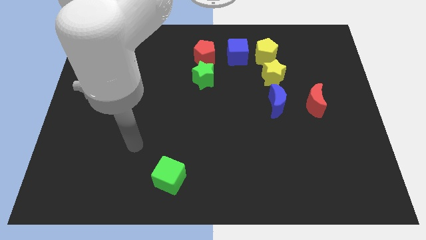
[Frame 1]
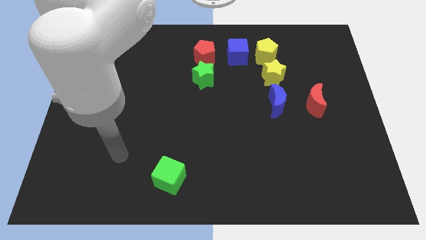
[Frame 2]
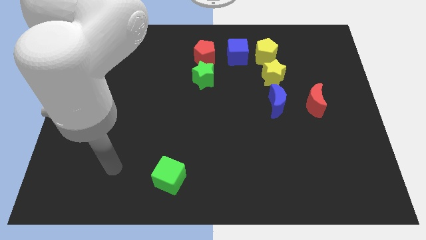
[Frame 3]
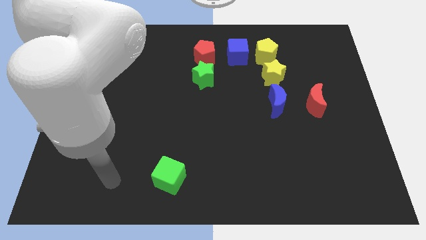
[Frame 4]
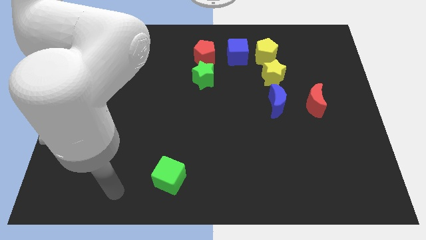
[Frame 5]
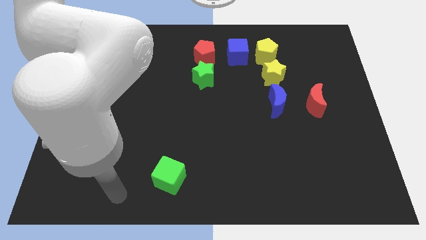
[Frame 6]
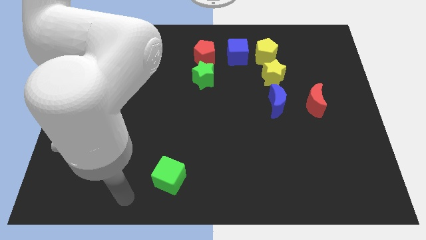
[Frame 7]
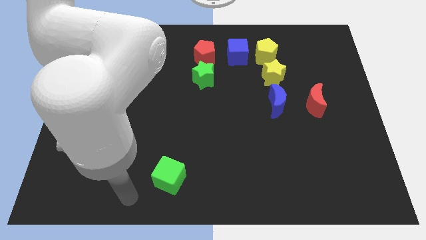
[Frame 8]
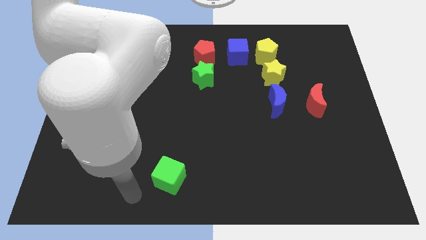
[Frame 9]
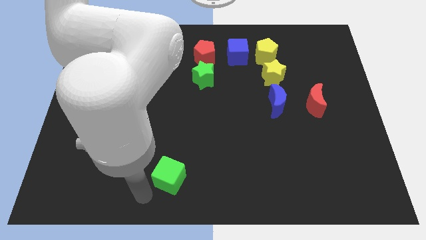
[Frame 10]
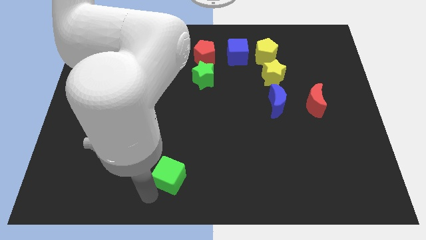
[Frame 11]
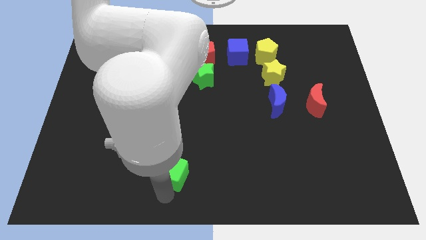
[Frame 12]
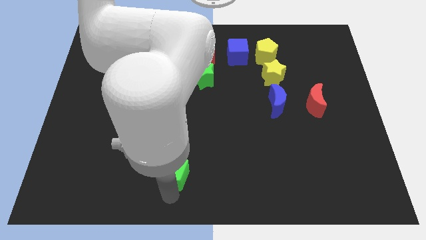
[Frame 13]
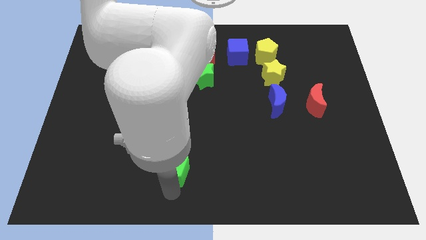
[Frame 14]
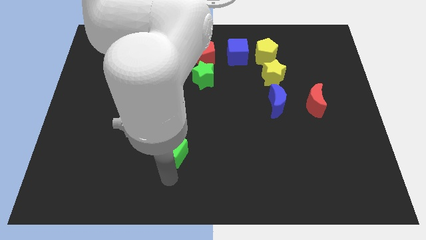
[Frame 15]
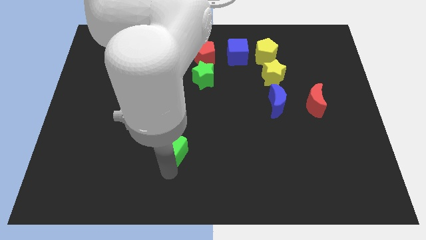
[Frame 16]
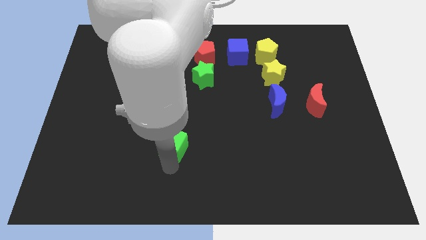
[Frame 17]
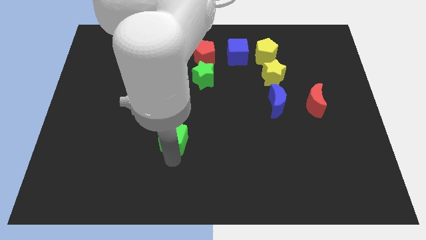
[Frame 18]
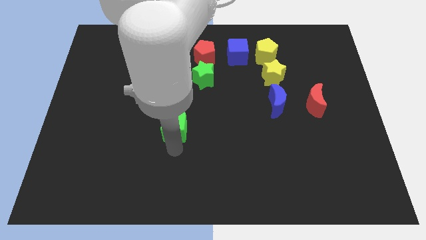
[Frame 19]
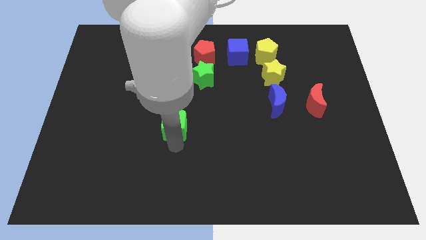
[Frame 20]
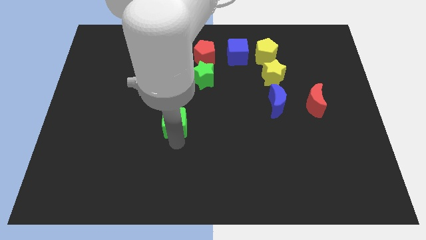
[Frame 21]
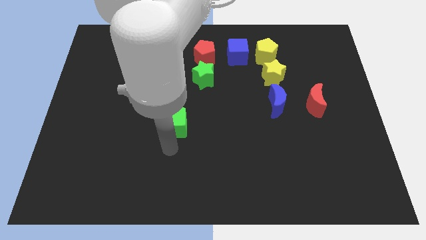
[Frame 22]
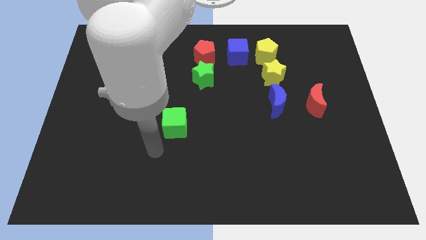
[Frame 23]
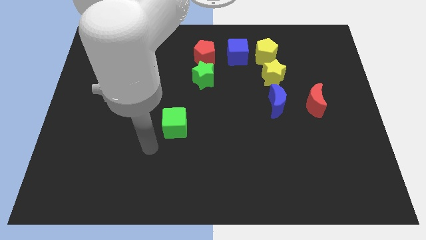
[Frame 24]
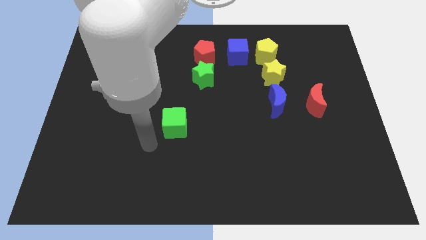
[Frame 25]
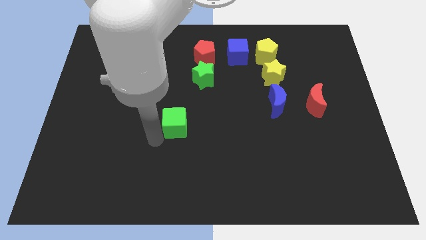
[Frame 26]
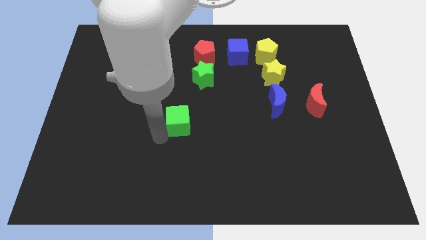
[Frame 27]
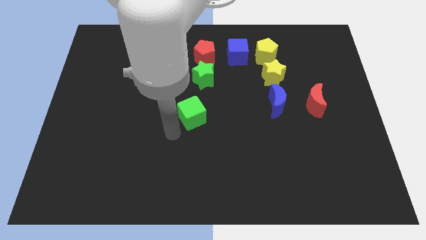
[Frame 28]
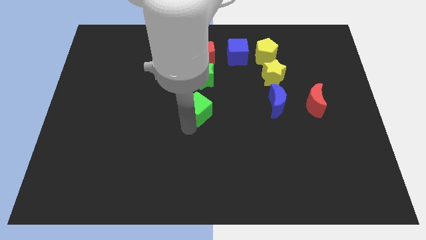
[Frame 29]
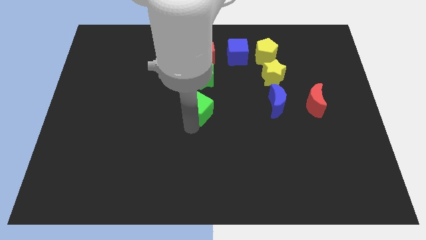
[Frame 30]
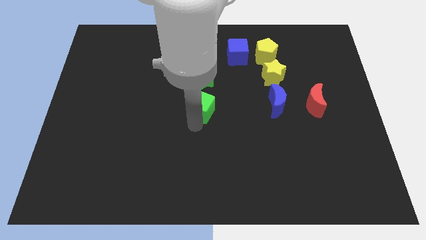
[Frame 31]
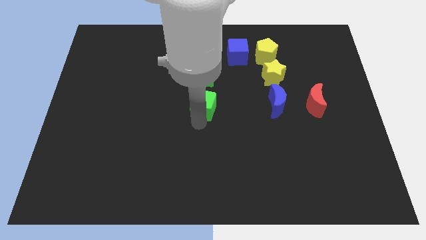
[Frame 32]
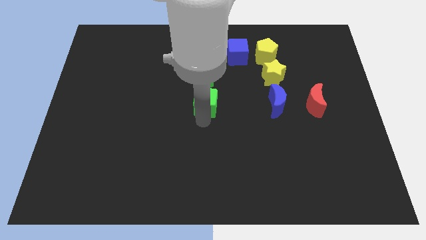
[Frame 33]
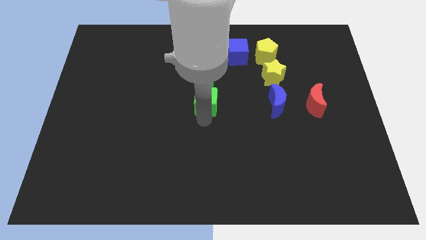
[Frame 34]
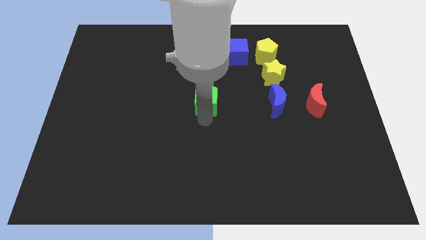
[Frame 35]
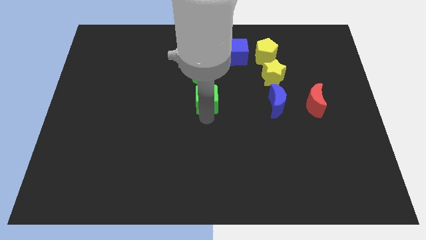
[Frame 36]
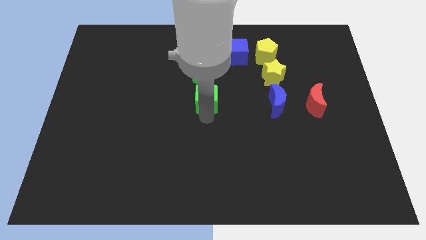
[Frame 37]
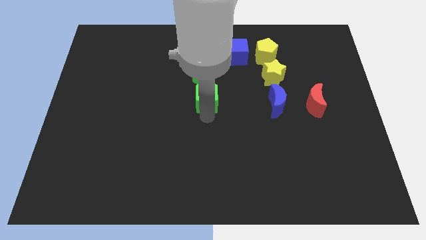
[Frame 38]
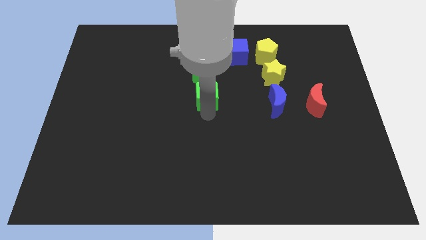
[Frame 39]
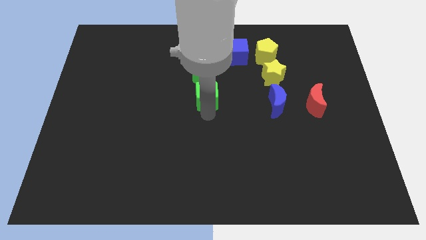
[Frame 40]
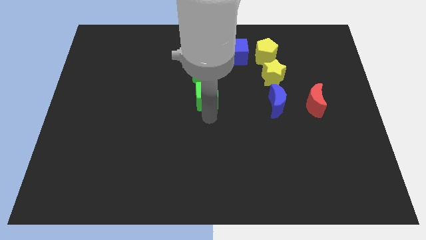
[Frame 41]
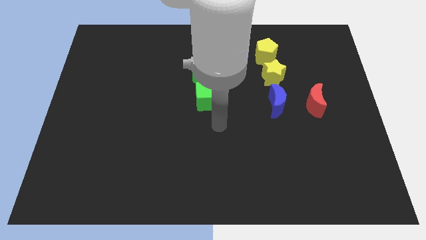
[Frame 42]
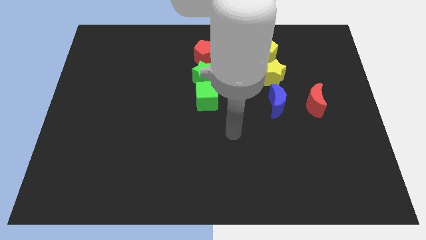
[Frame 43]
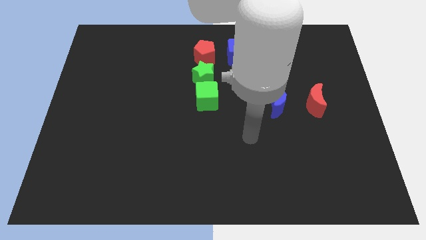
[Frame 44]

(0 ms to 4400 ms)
slide the green cube vertically at the bottom of the green star

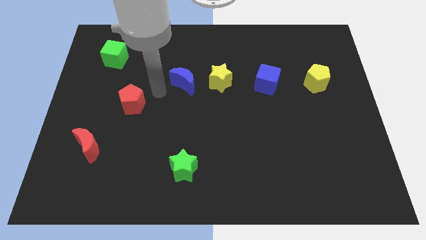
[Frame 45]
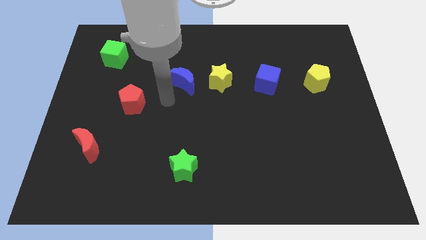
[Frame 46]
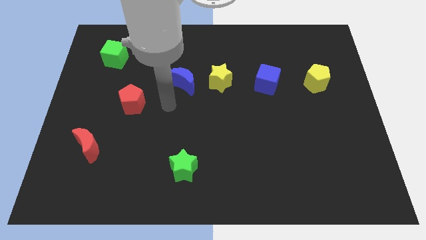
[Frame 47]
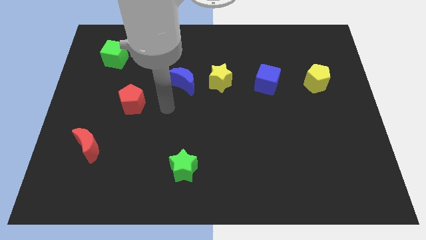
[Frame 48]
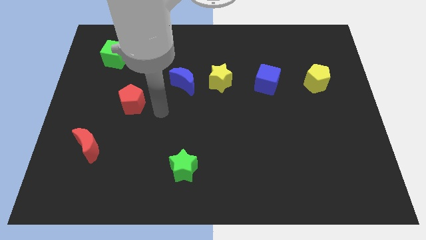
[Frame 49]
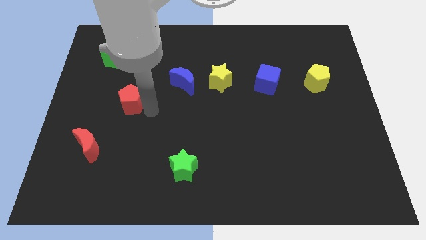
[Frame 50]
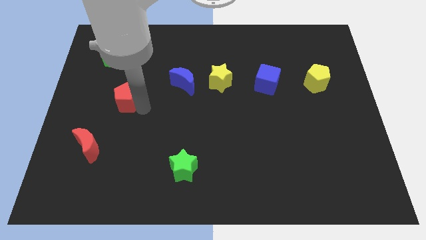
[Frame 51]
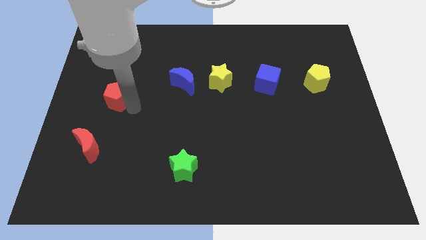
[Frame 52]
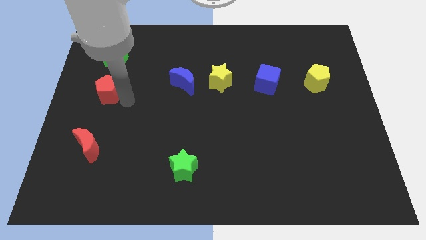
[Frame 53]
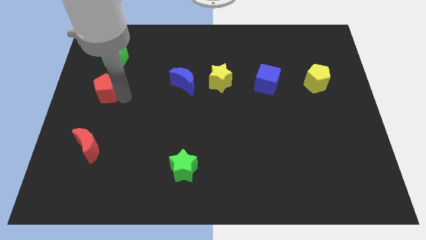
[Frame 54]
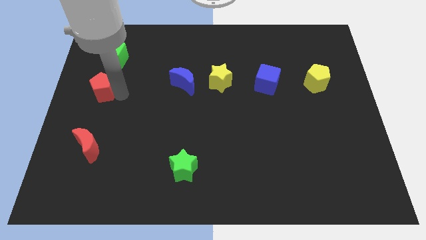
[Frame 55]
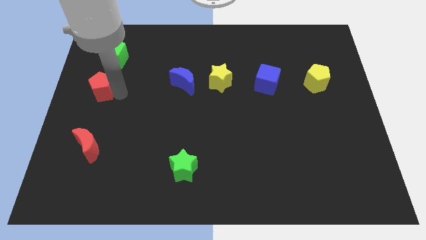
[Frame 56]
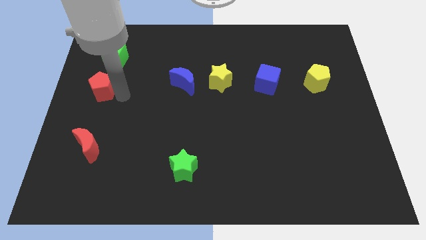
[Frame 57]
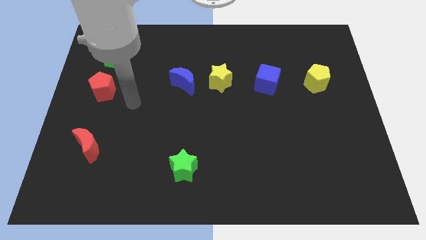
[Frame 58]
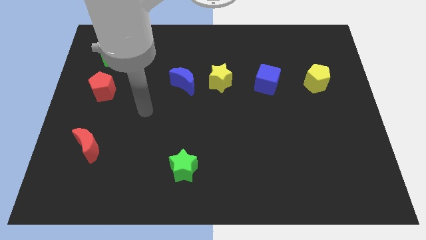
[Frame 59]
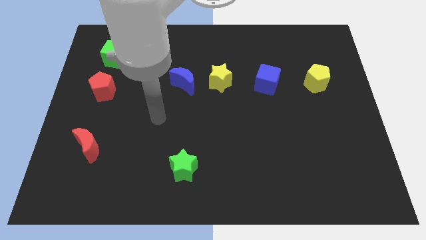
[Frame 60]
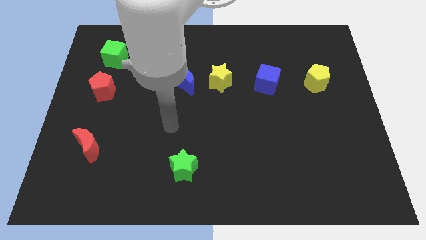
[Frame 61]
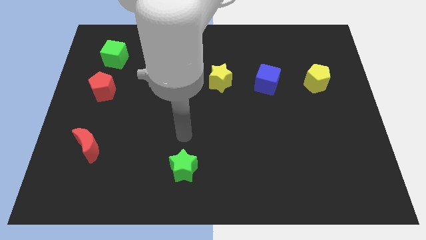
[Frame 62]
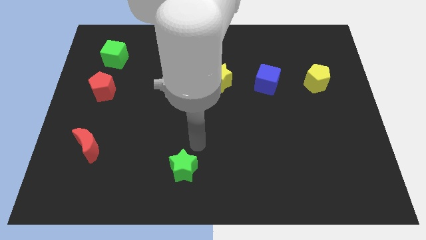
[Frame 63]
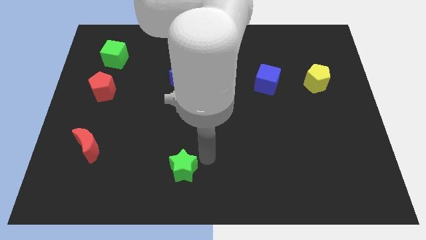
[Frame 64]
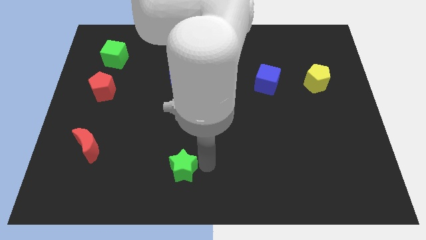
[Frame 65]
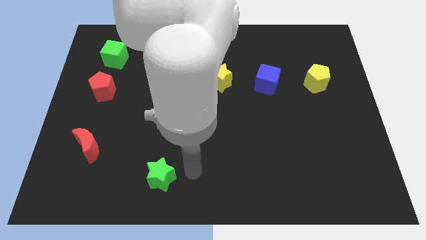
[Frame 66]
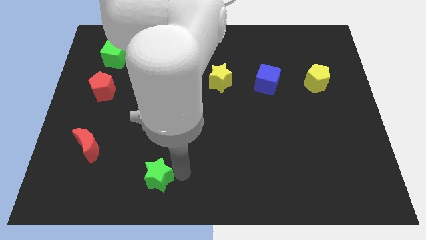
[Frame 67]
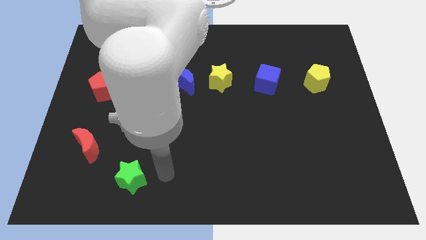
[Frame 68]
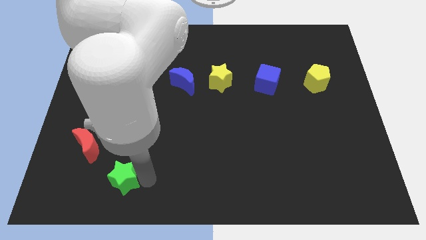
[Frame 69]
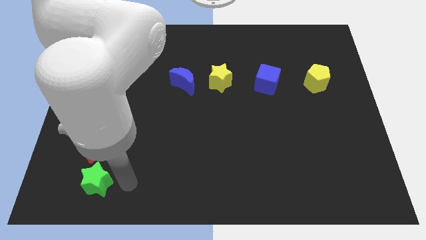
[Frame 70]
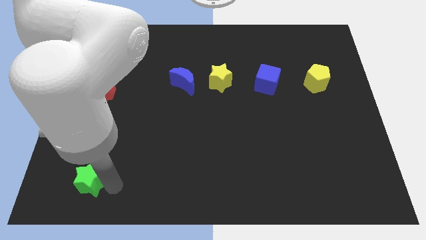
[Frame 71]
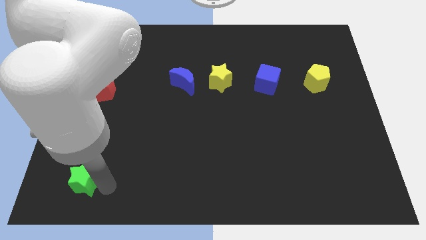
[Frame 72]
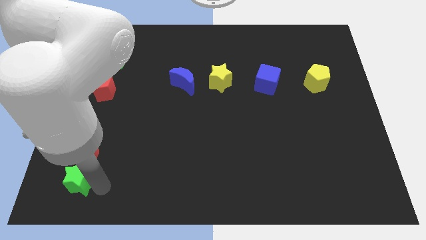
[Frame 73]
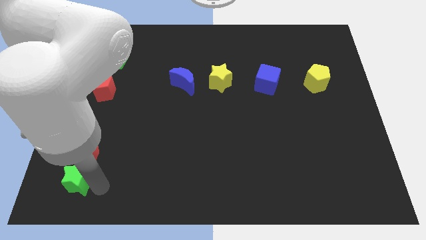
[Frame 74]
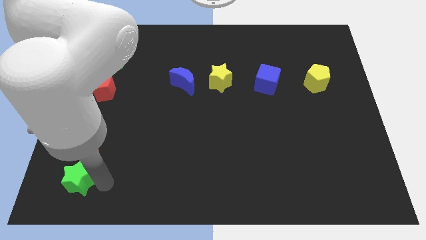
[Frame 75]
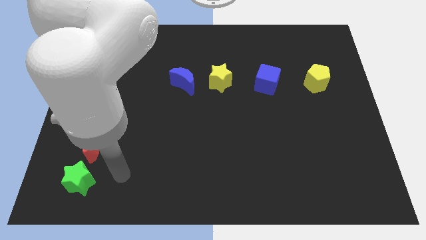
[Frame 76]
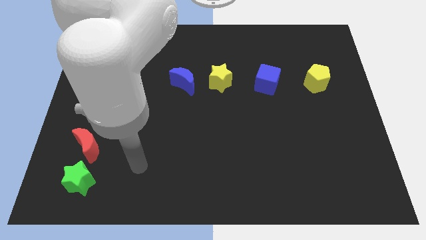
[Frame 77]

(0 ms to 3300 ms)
push green star below red crescent

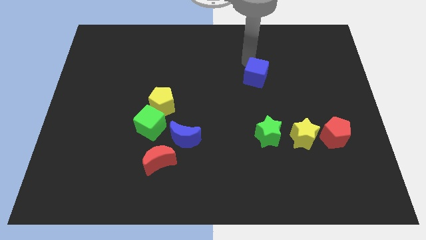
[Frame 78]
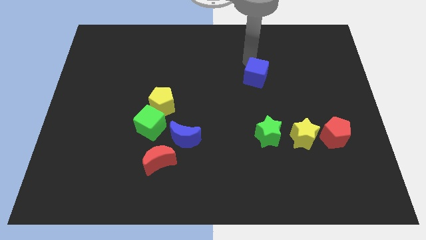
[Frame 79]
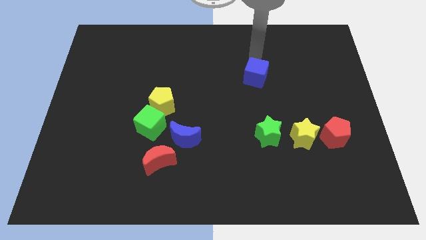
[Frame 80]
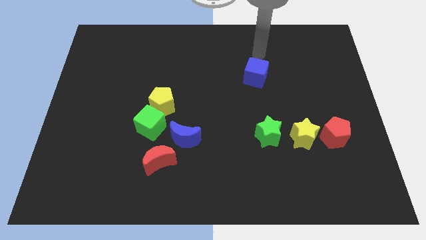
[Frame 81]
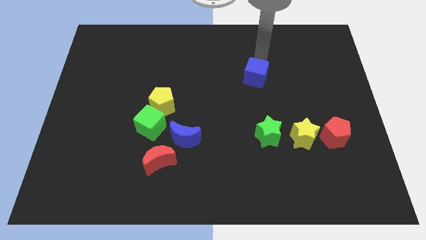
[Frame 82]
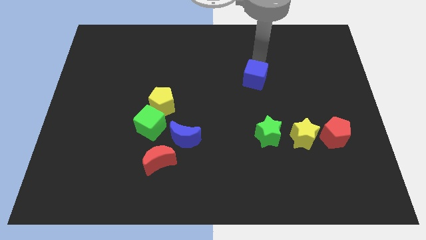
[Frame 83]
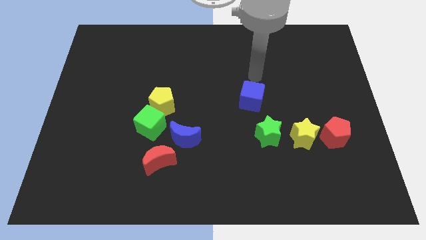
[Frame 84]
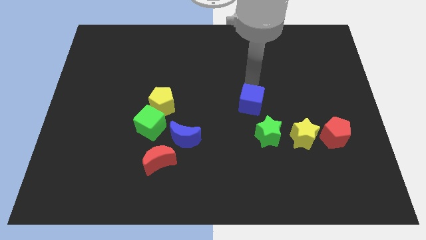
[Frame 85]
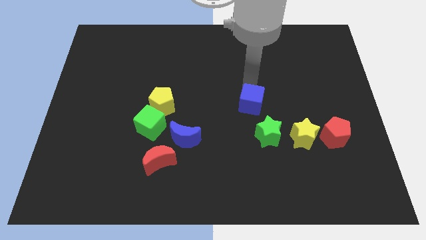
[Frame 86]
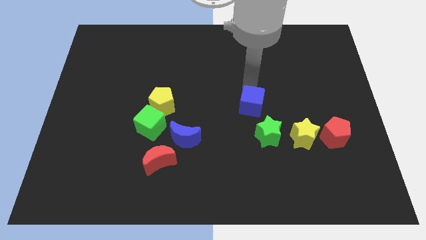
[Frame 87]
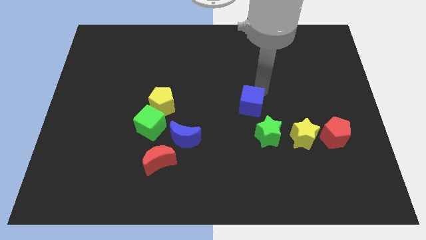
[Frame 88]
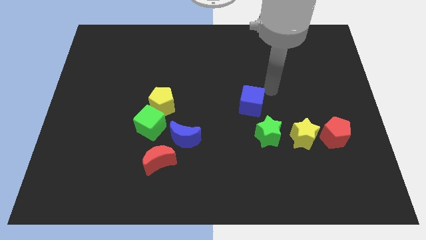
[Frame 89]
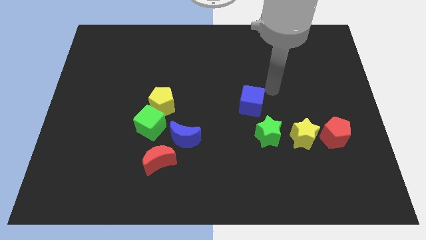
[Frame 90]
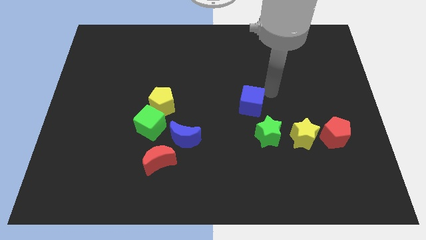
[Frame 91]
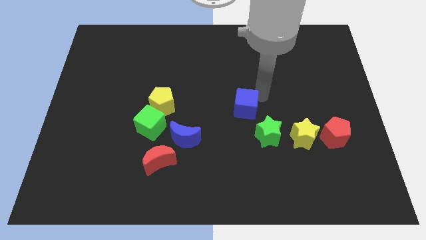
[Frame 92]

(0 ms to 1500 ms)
slide blue cube towards green star
